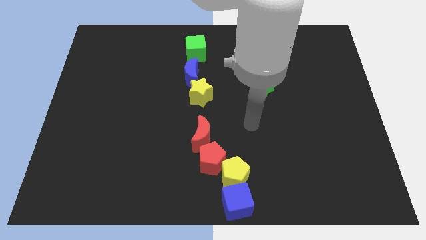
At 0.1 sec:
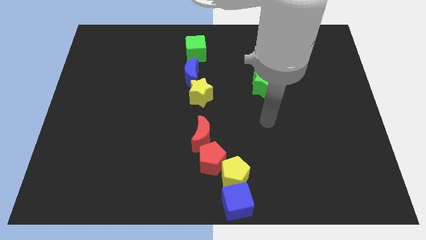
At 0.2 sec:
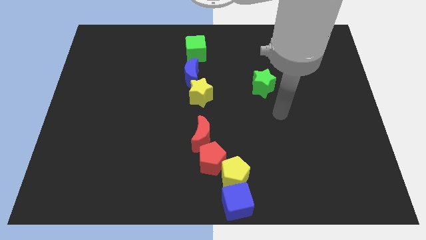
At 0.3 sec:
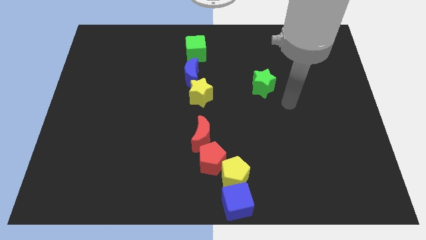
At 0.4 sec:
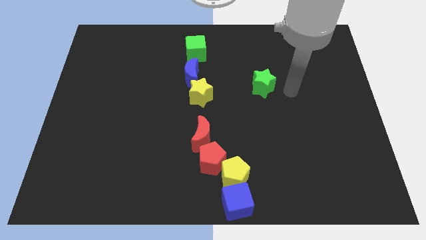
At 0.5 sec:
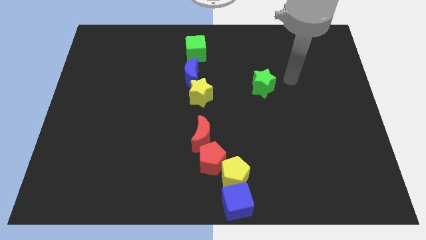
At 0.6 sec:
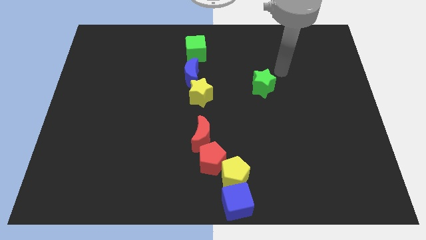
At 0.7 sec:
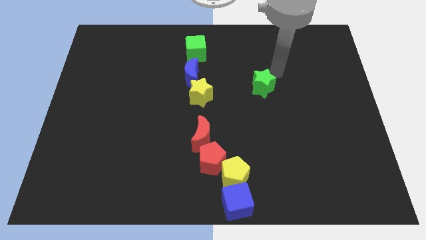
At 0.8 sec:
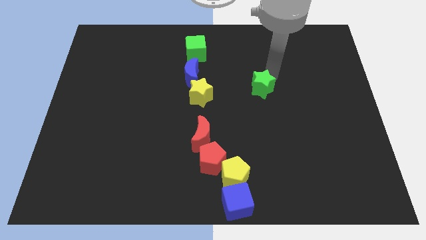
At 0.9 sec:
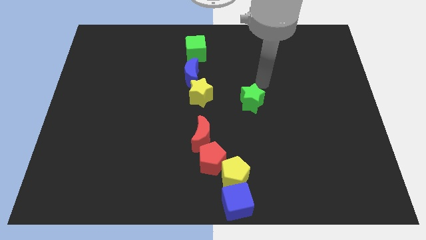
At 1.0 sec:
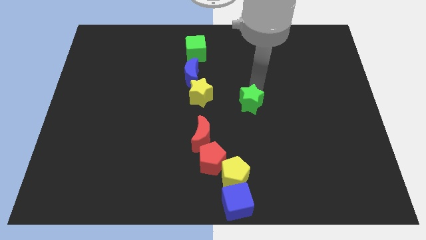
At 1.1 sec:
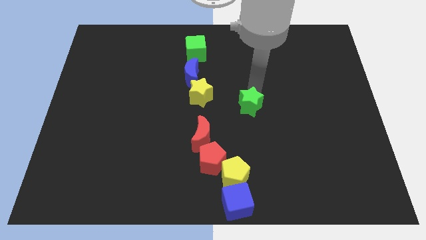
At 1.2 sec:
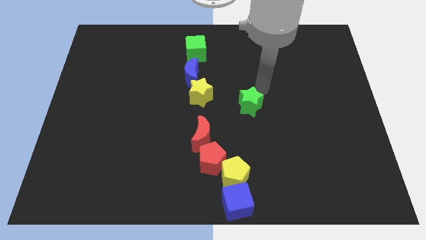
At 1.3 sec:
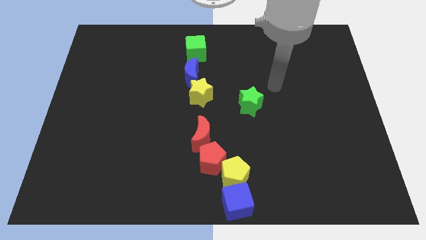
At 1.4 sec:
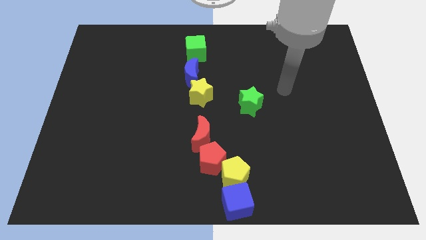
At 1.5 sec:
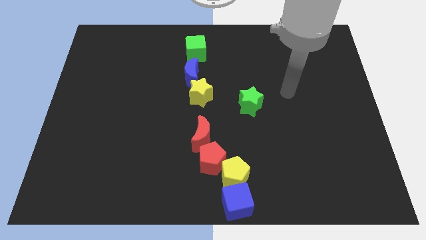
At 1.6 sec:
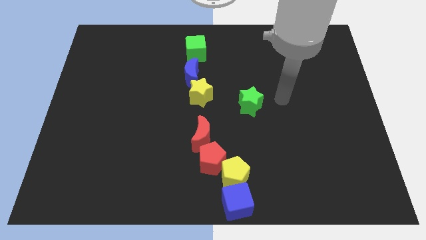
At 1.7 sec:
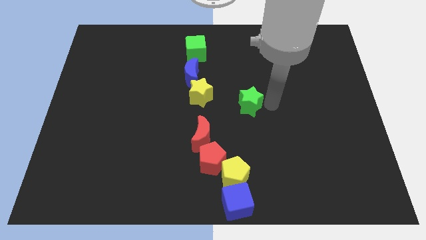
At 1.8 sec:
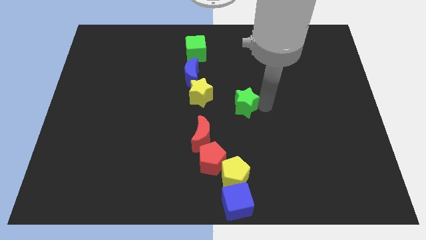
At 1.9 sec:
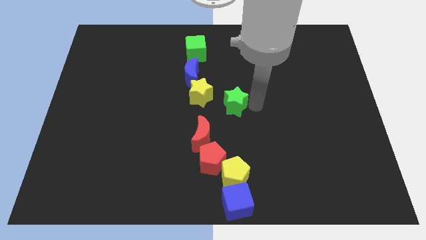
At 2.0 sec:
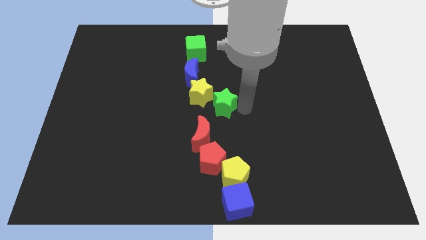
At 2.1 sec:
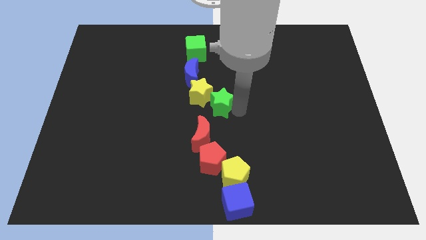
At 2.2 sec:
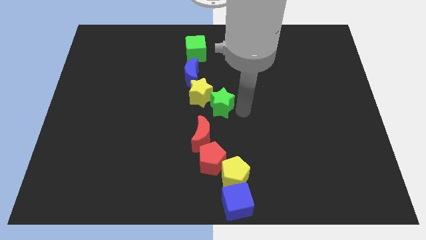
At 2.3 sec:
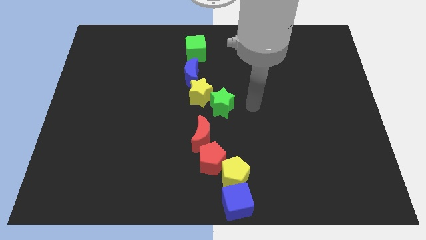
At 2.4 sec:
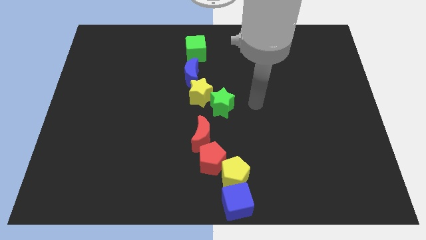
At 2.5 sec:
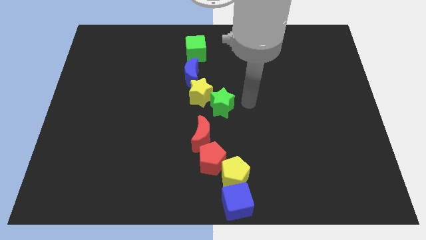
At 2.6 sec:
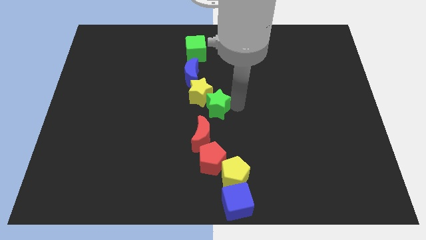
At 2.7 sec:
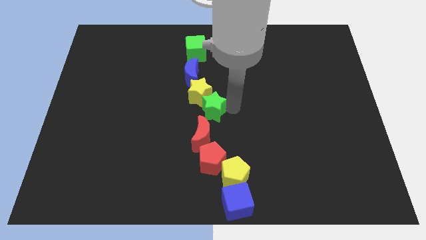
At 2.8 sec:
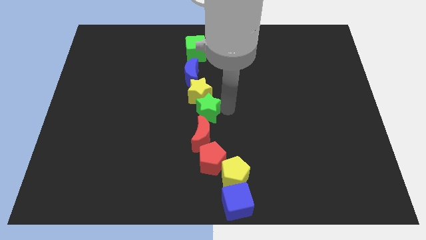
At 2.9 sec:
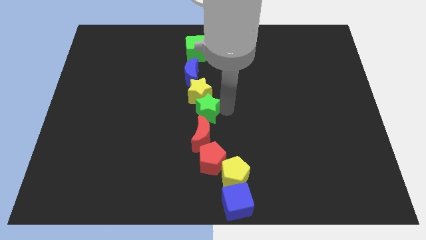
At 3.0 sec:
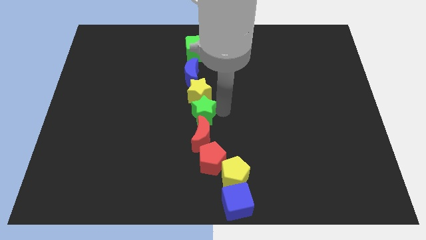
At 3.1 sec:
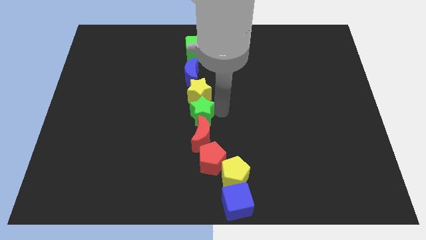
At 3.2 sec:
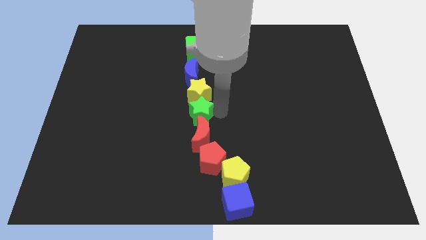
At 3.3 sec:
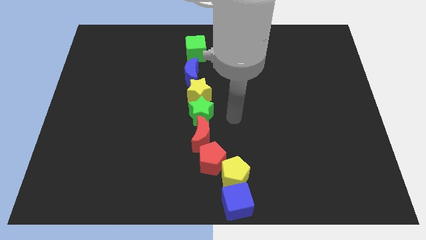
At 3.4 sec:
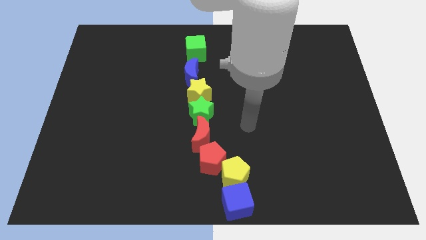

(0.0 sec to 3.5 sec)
move the green star between yellow star and red moon

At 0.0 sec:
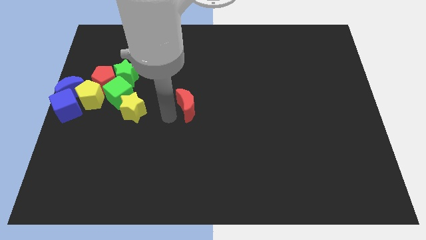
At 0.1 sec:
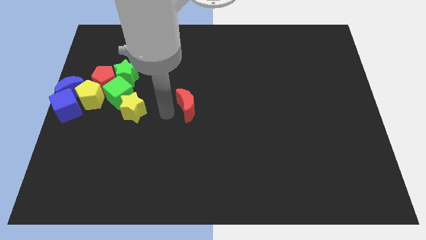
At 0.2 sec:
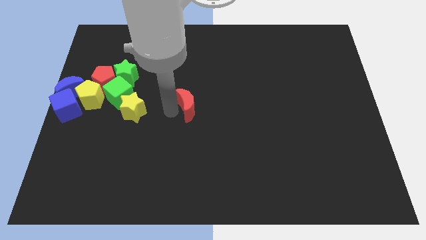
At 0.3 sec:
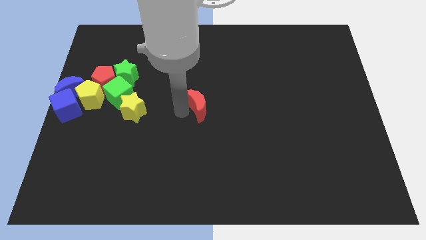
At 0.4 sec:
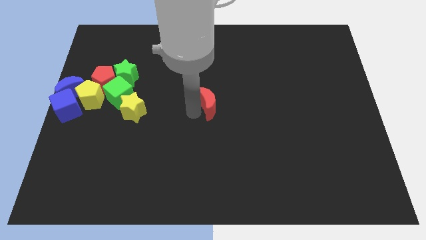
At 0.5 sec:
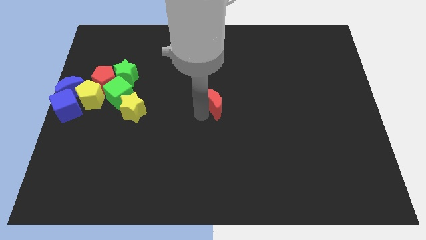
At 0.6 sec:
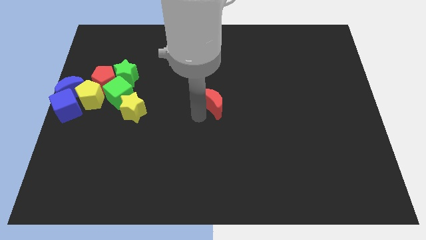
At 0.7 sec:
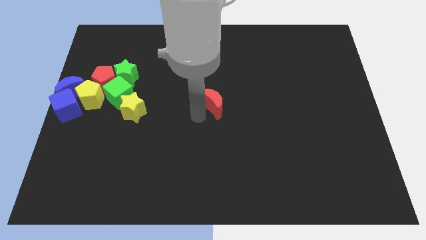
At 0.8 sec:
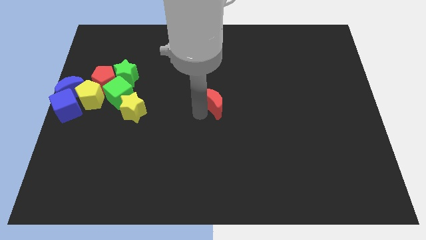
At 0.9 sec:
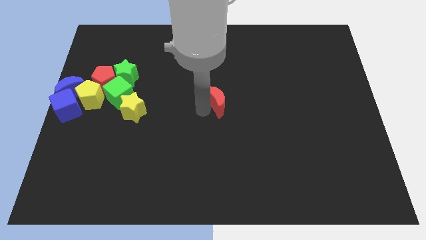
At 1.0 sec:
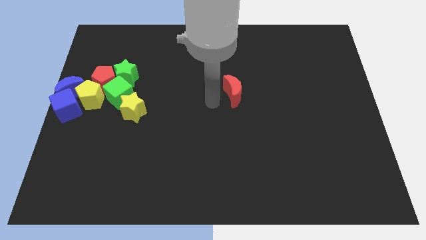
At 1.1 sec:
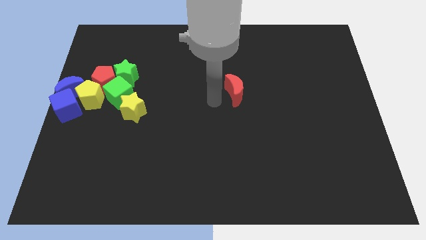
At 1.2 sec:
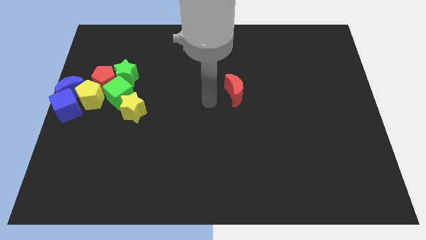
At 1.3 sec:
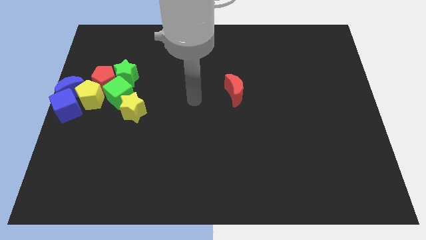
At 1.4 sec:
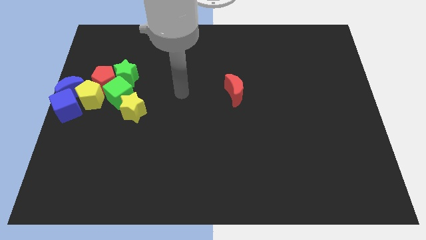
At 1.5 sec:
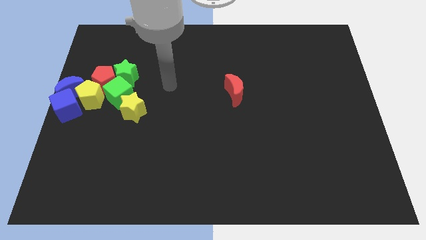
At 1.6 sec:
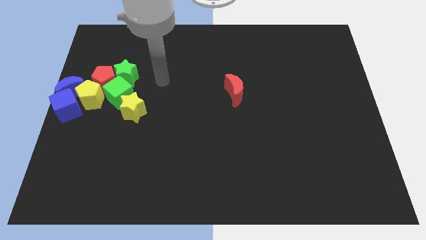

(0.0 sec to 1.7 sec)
push the red crescent to the right of the board

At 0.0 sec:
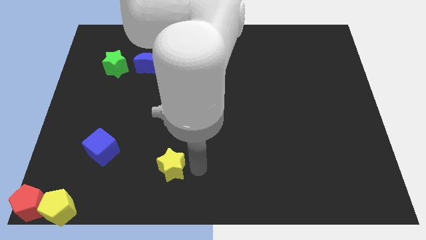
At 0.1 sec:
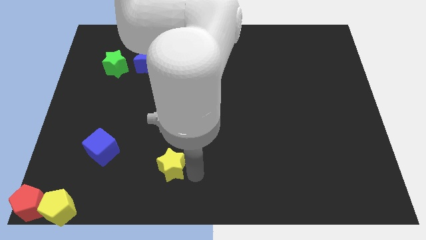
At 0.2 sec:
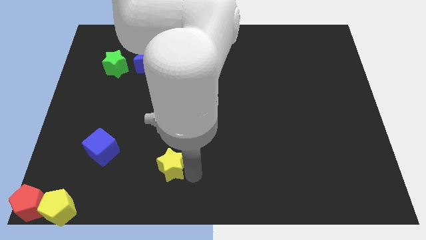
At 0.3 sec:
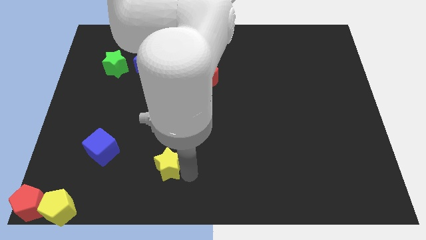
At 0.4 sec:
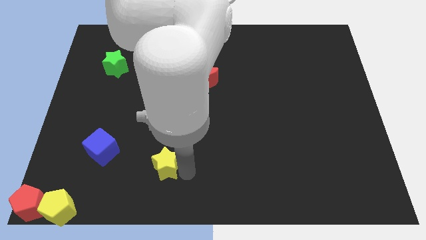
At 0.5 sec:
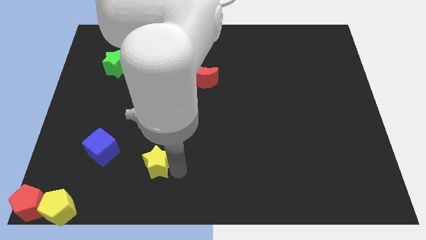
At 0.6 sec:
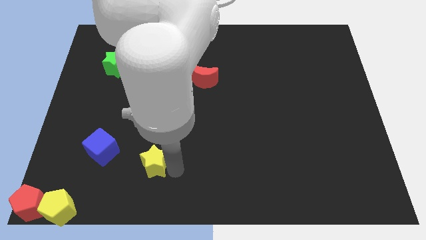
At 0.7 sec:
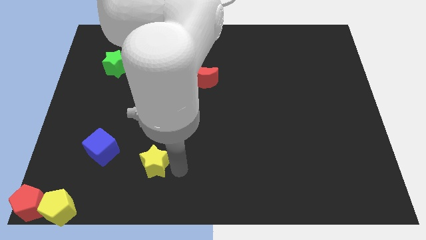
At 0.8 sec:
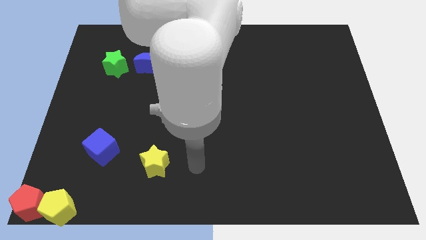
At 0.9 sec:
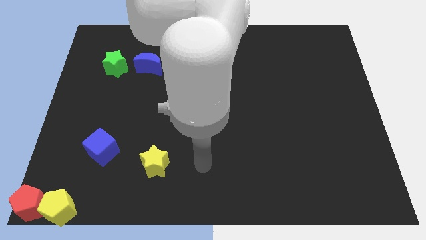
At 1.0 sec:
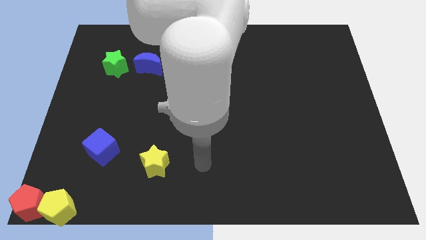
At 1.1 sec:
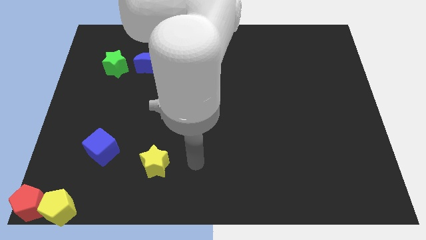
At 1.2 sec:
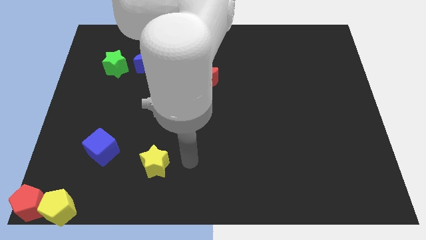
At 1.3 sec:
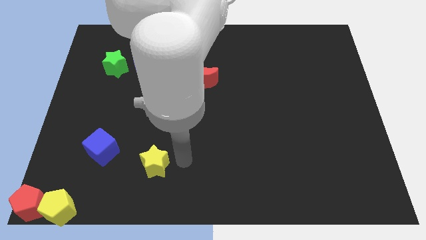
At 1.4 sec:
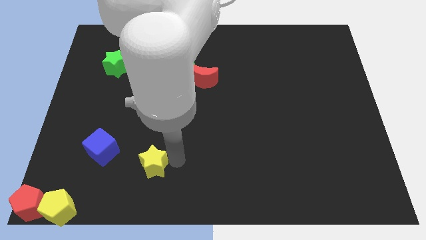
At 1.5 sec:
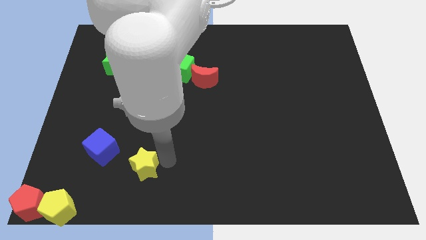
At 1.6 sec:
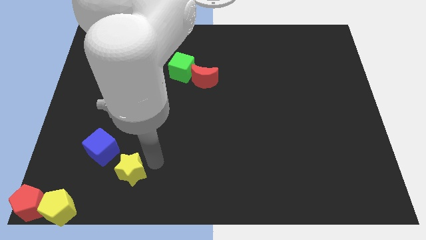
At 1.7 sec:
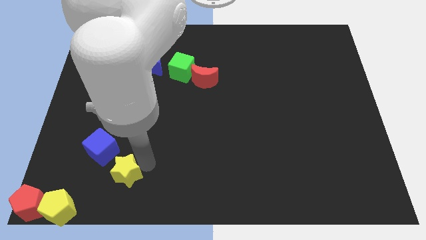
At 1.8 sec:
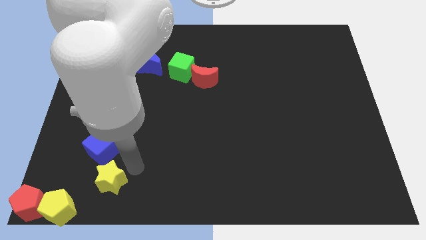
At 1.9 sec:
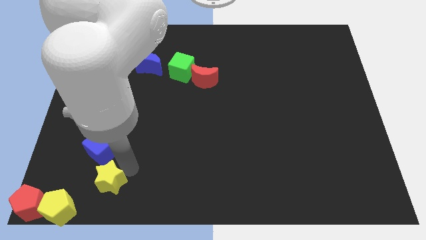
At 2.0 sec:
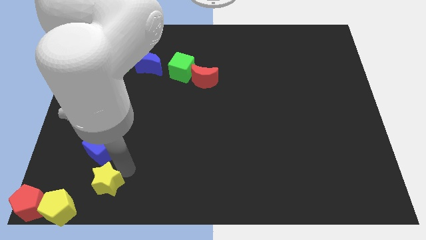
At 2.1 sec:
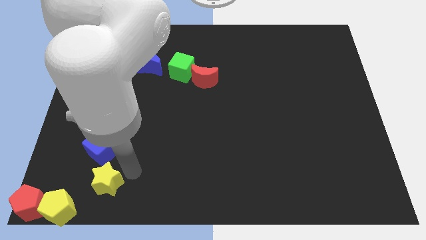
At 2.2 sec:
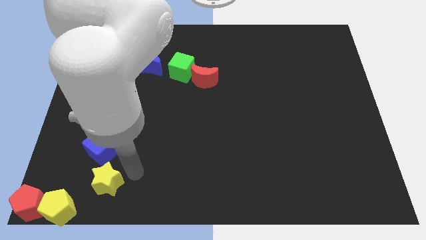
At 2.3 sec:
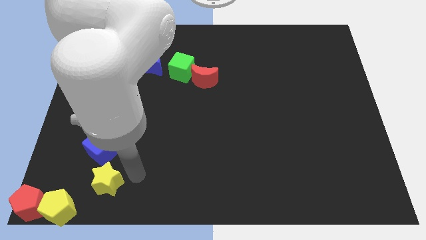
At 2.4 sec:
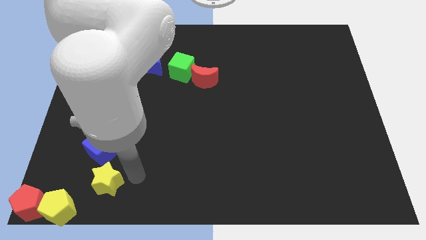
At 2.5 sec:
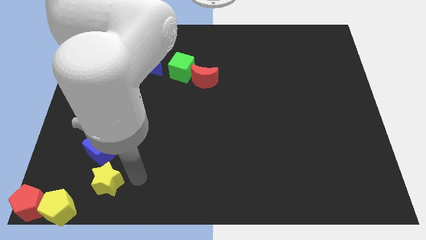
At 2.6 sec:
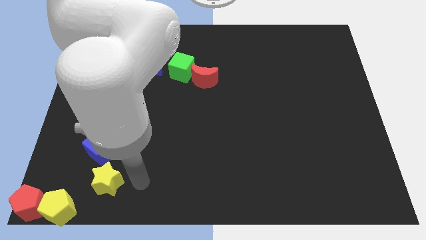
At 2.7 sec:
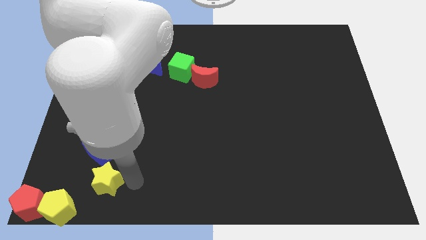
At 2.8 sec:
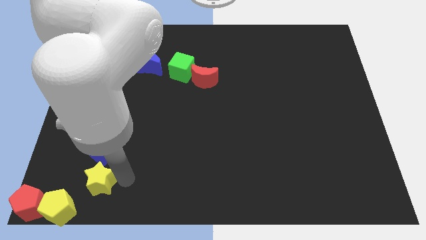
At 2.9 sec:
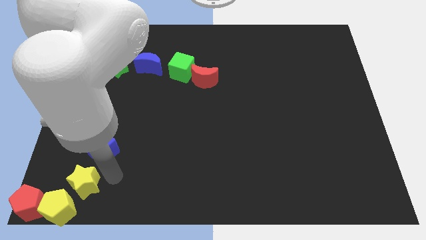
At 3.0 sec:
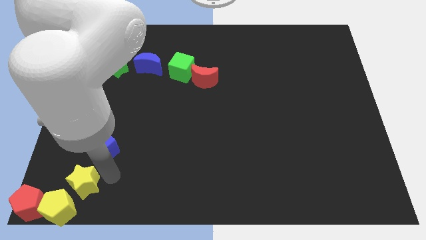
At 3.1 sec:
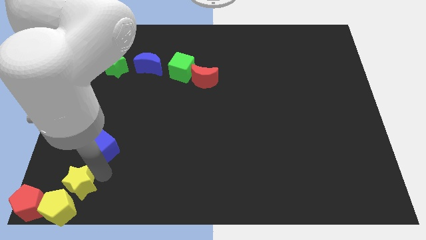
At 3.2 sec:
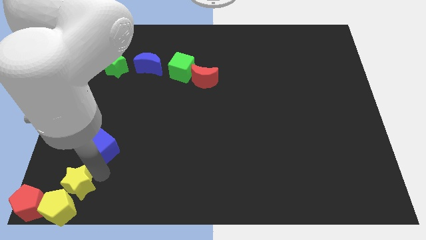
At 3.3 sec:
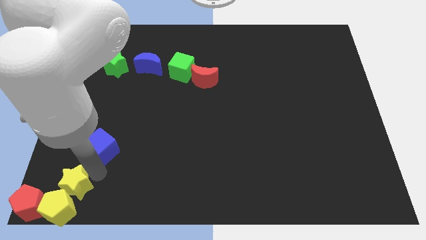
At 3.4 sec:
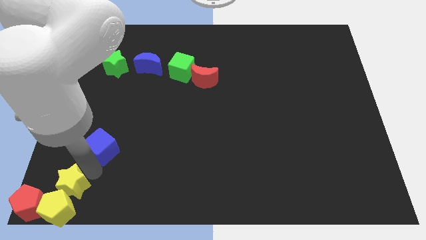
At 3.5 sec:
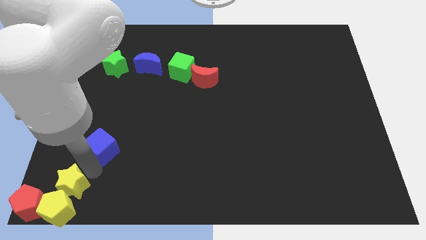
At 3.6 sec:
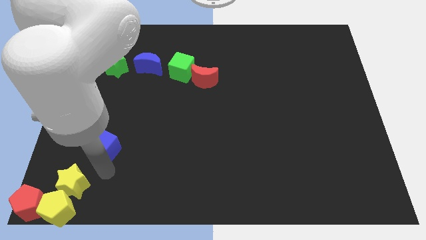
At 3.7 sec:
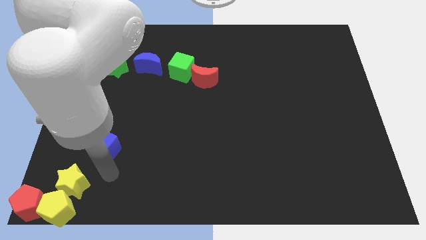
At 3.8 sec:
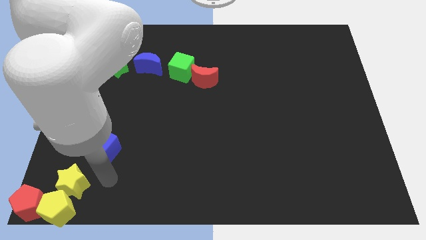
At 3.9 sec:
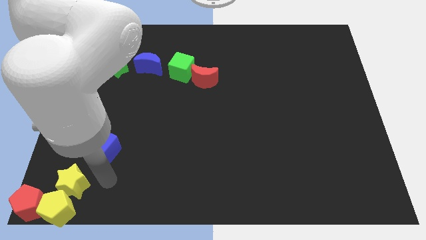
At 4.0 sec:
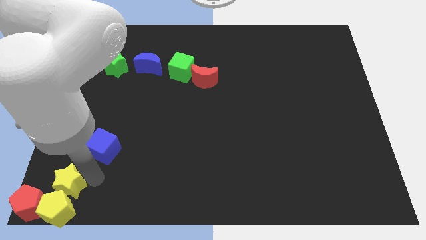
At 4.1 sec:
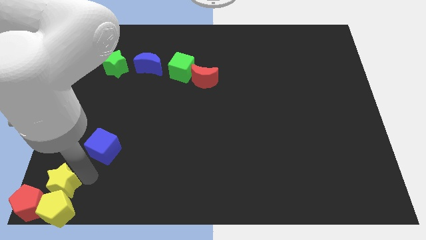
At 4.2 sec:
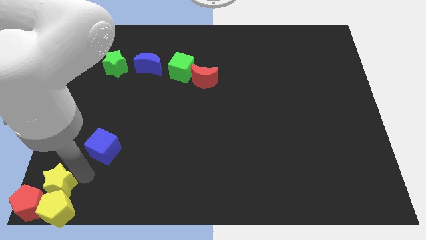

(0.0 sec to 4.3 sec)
place the yellow star above yellow pentagon
